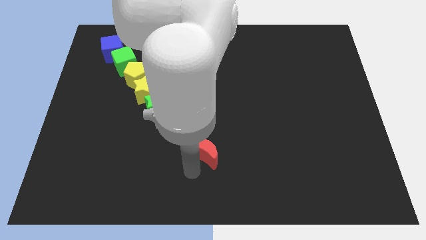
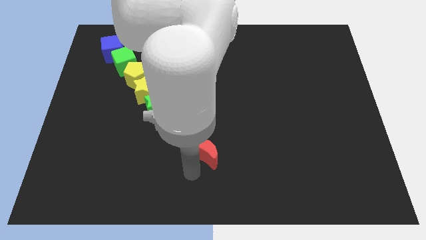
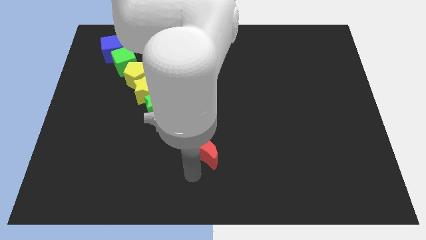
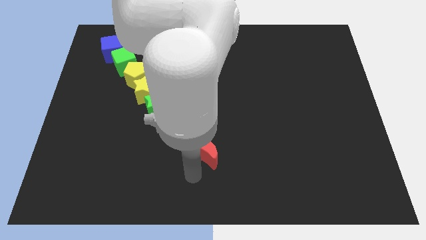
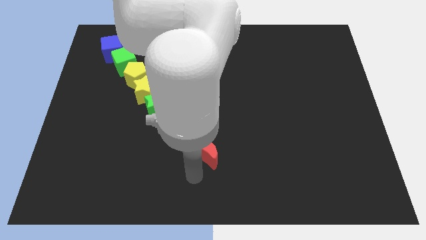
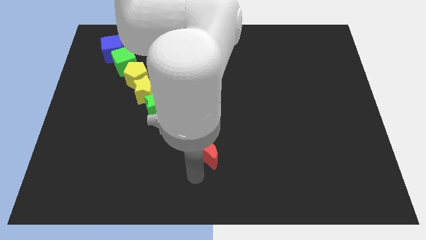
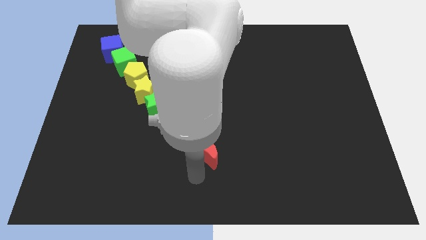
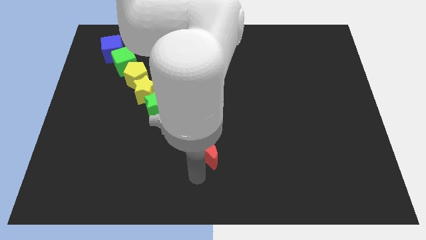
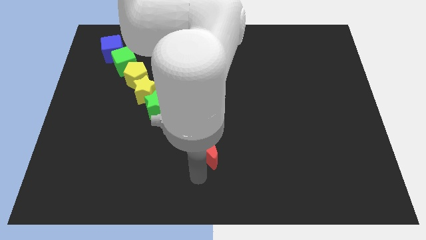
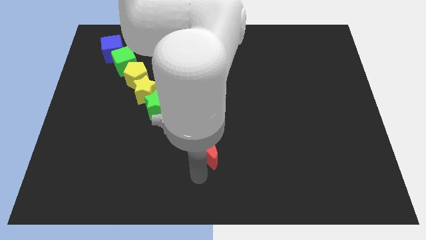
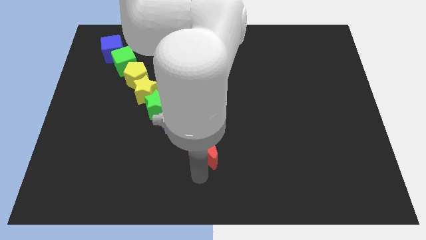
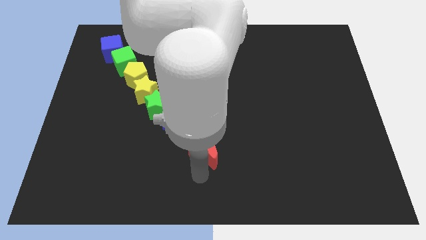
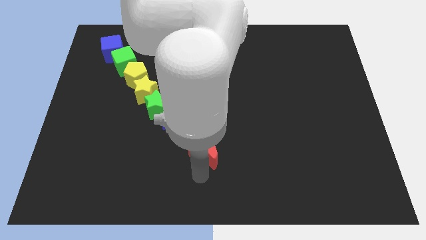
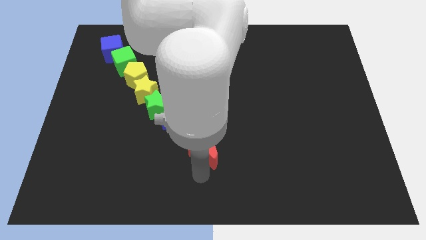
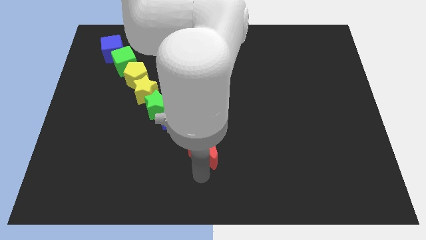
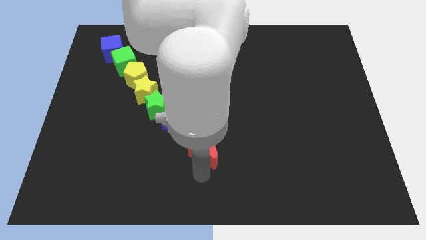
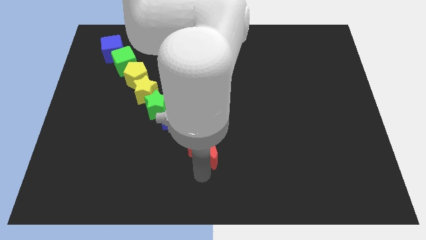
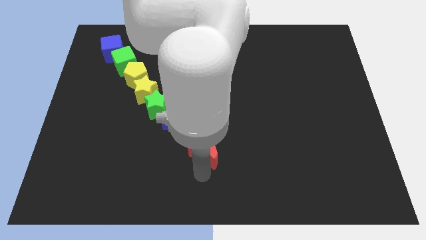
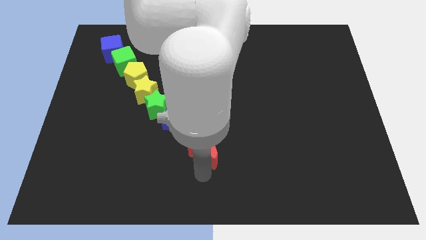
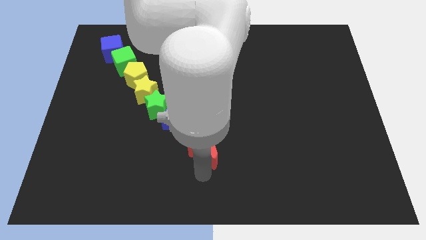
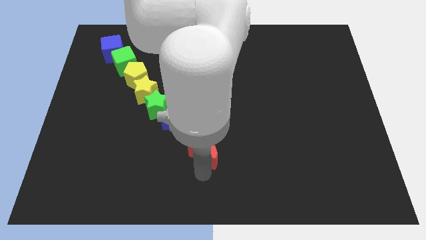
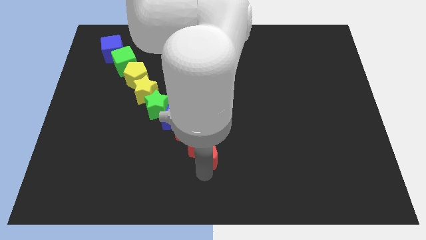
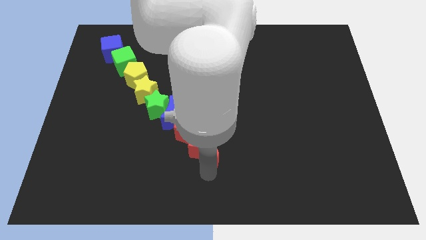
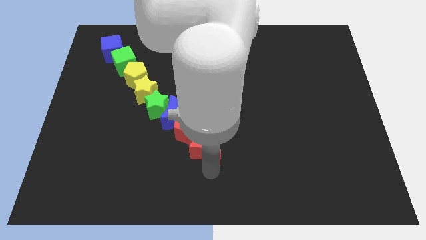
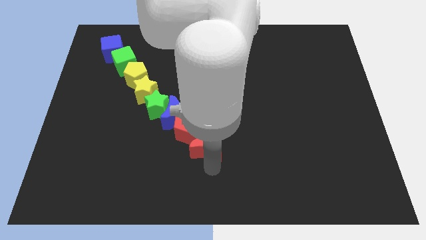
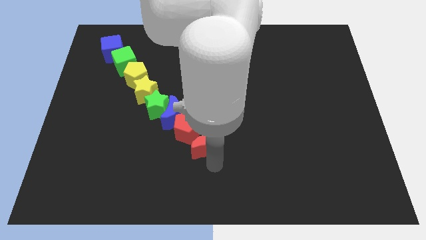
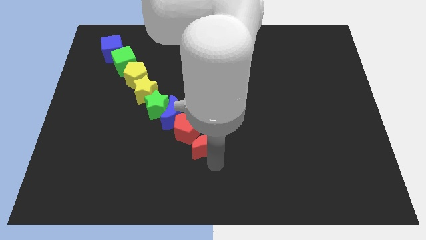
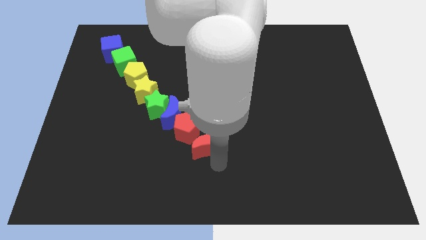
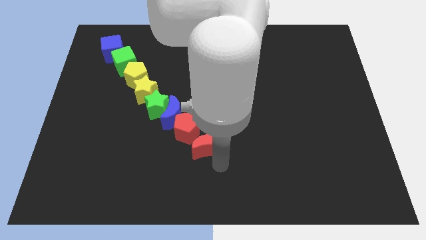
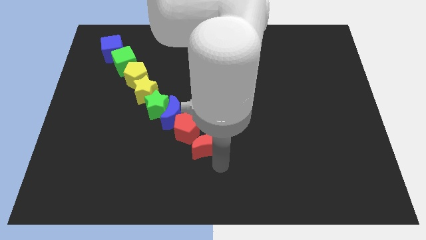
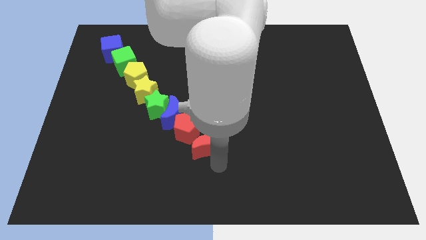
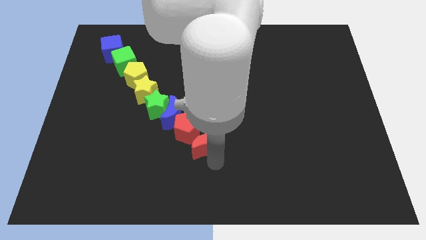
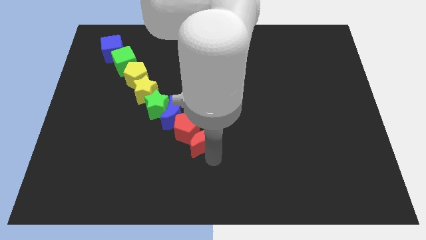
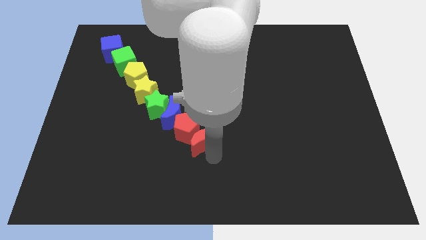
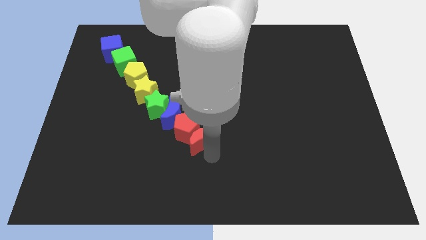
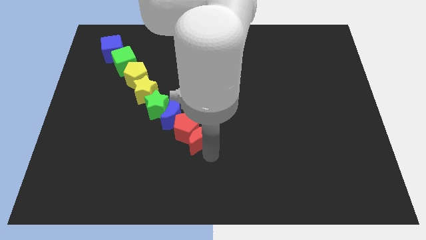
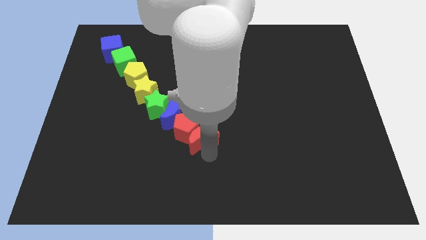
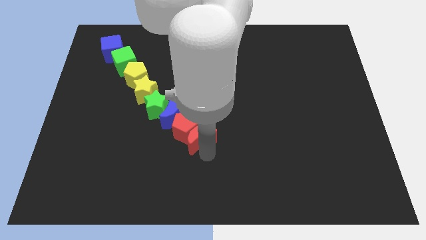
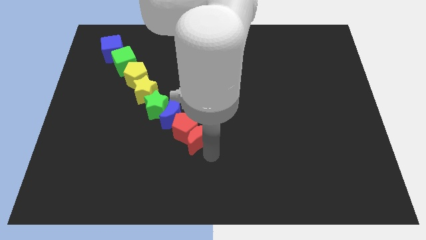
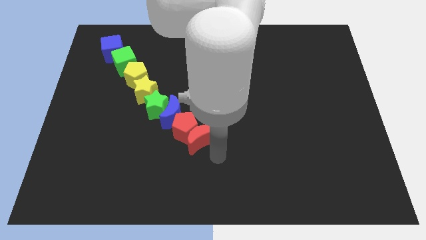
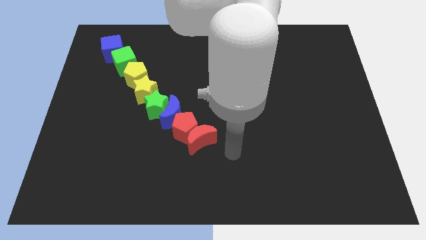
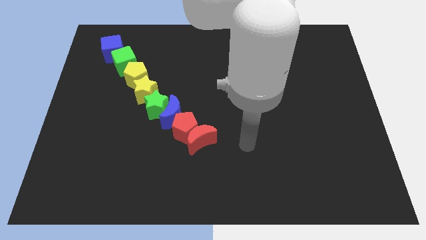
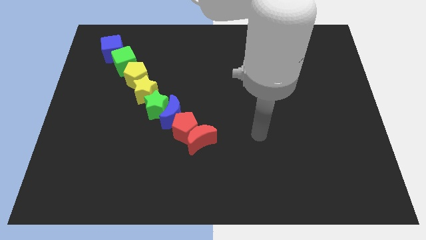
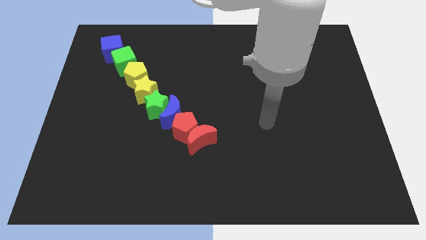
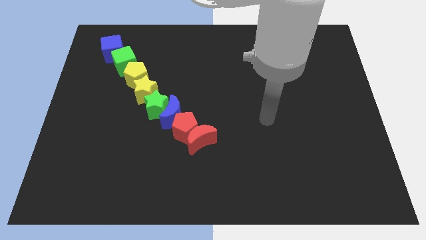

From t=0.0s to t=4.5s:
make a diagonal line of all the blocks

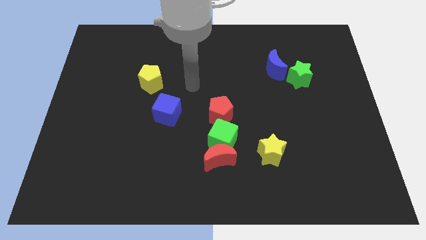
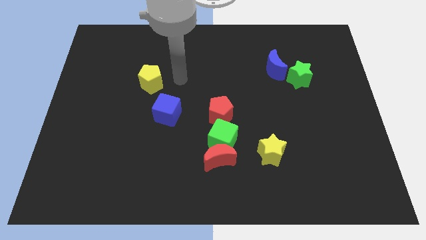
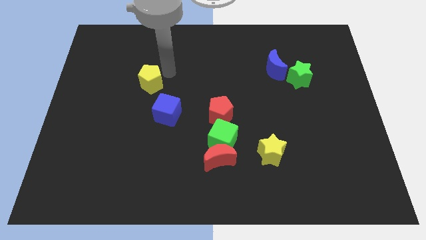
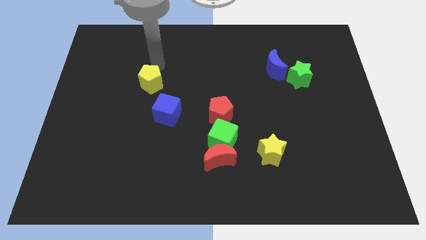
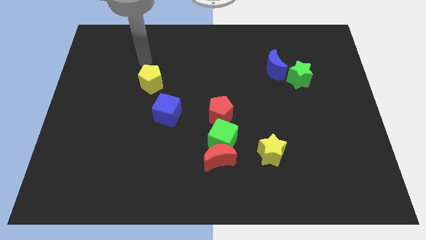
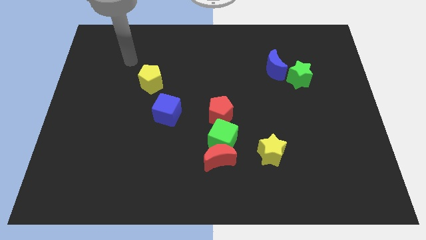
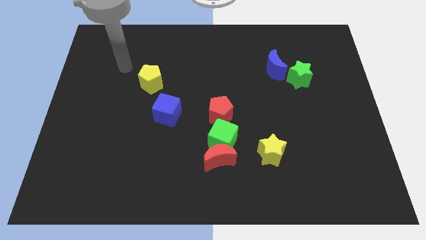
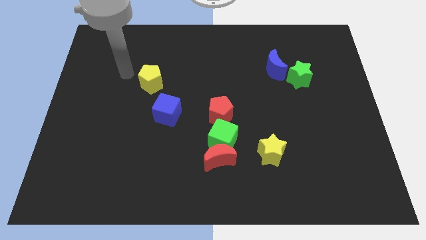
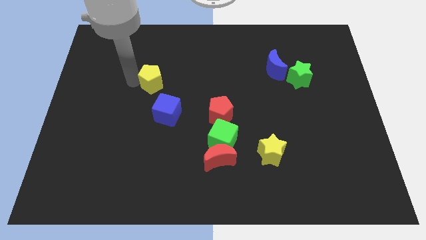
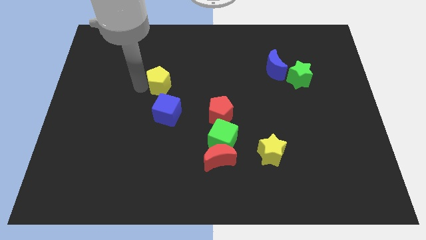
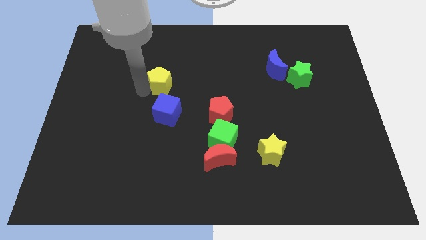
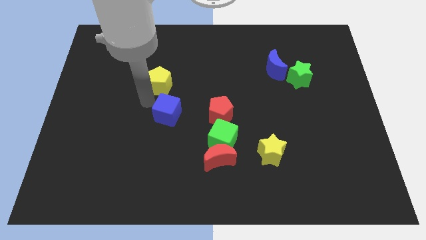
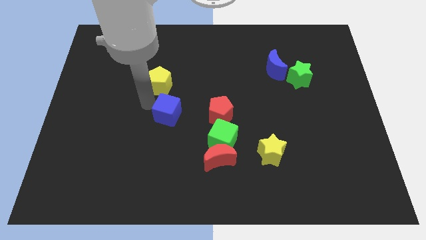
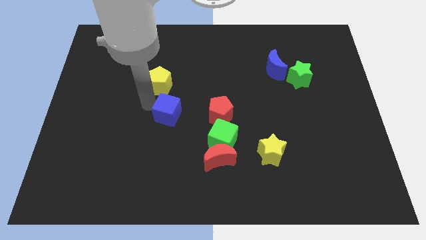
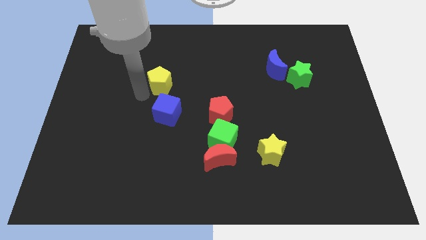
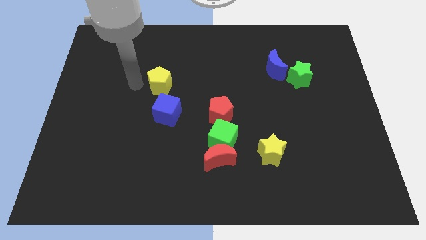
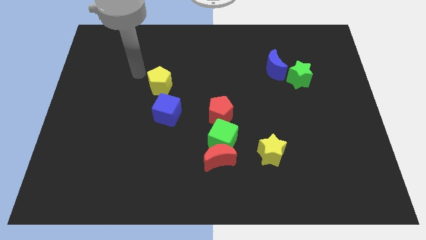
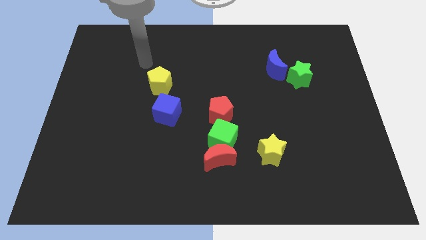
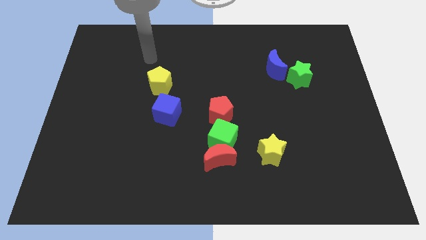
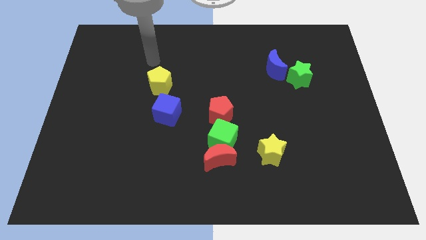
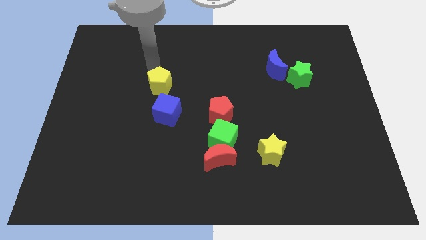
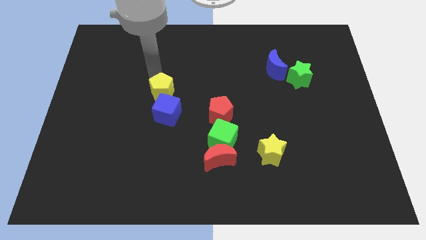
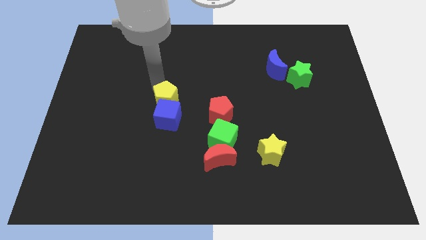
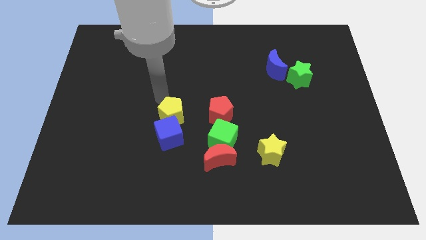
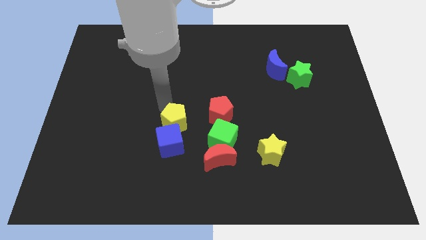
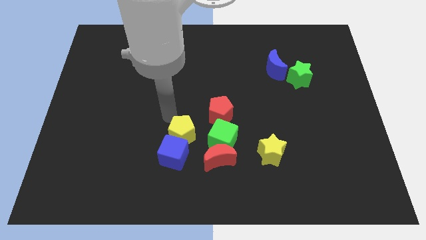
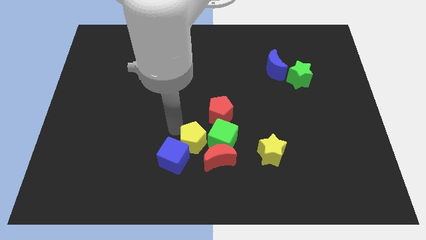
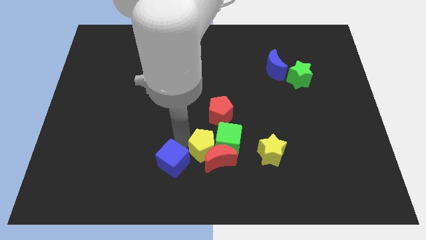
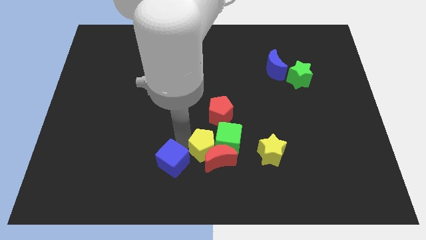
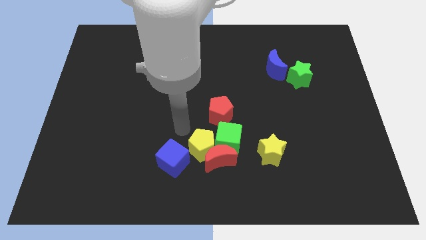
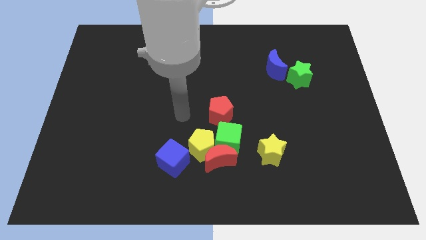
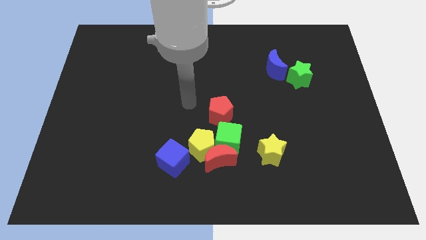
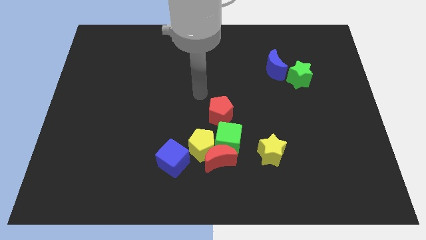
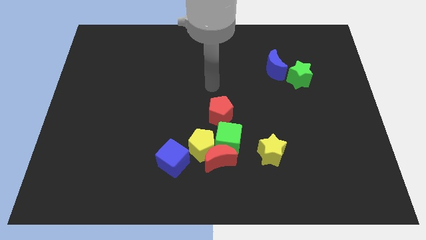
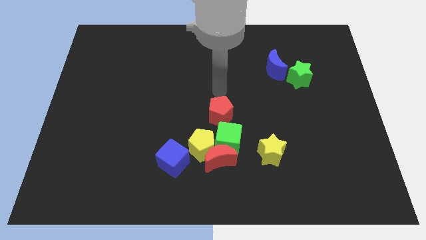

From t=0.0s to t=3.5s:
push the yellow pentagon into the blue cube

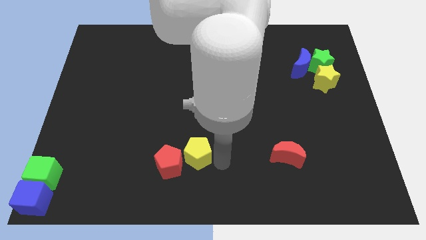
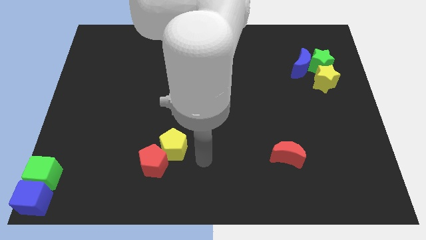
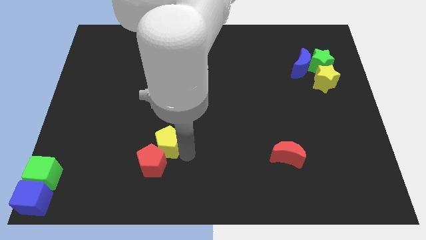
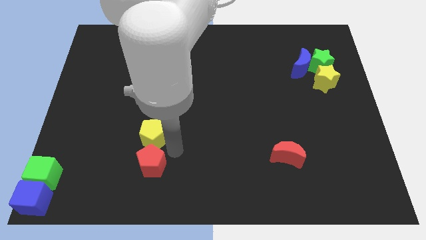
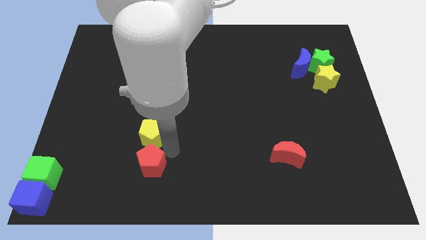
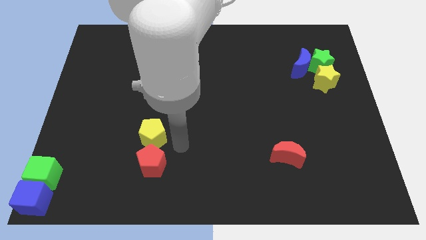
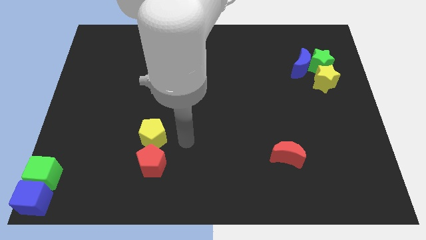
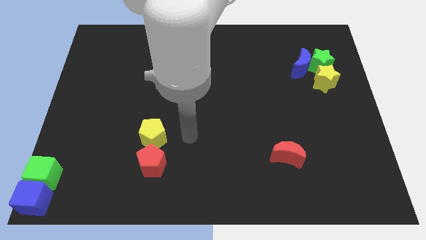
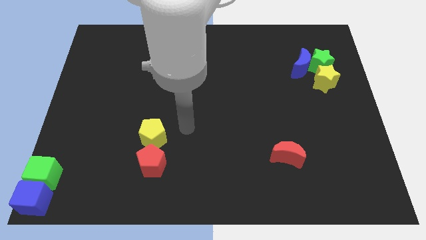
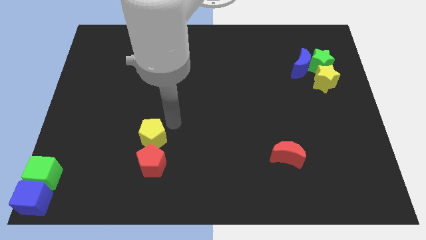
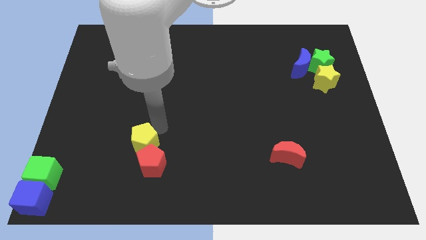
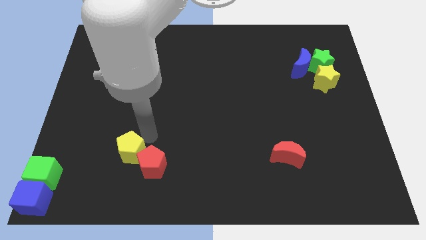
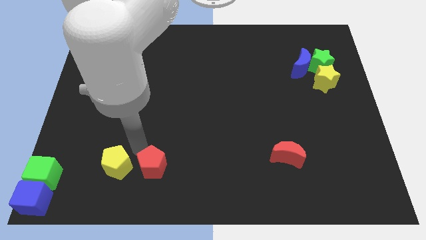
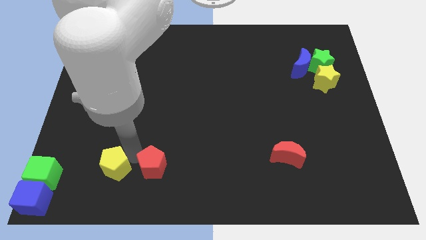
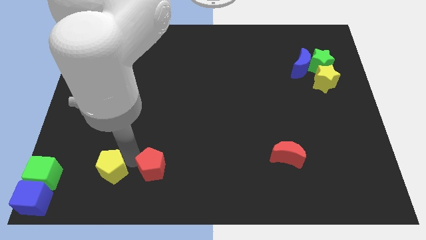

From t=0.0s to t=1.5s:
move the yellow pentagon to the left of red pentagon
